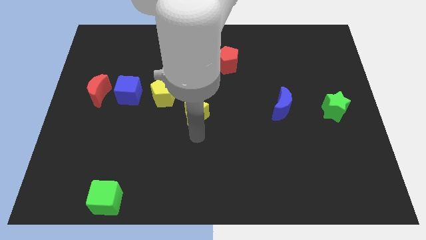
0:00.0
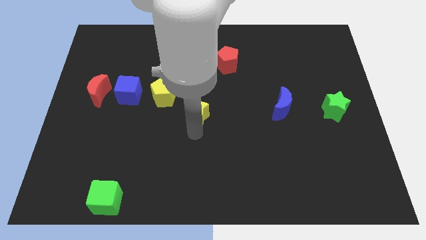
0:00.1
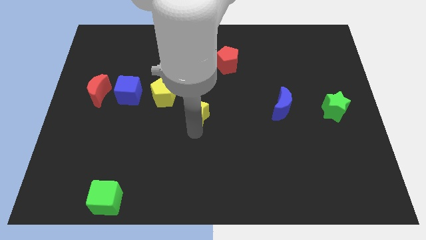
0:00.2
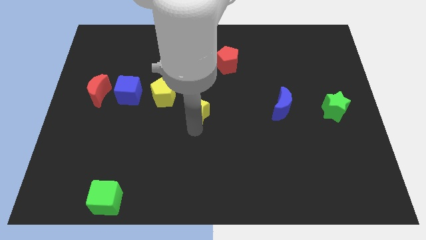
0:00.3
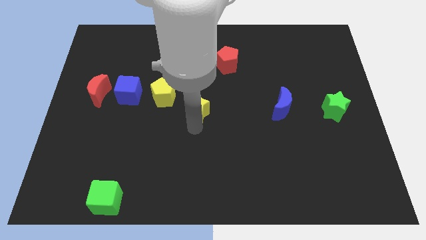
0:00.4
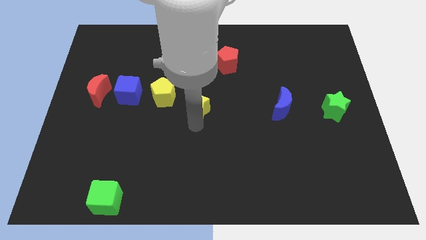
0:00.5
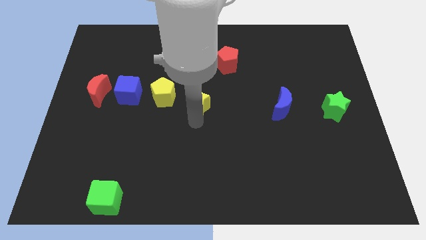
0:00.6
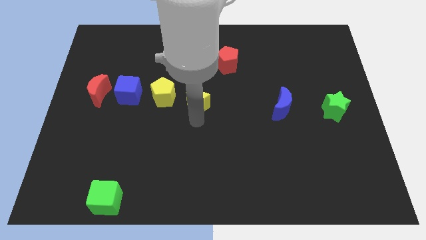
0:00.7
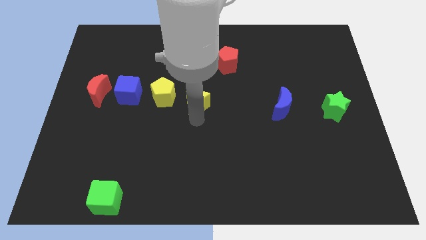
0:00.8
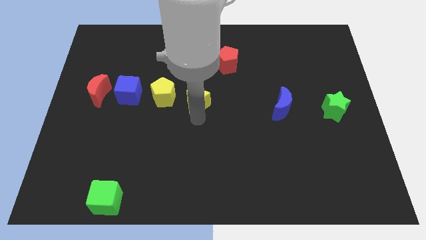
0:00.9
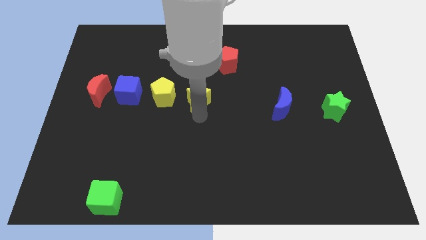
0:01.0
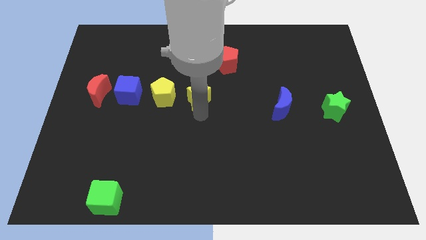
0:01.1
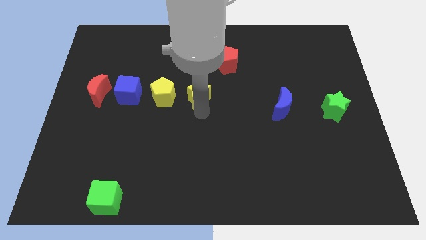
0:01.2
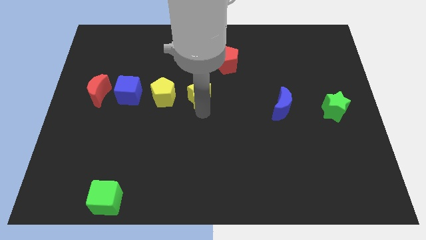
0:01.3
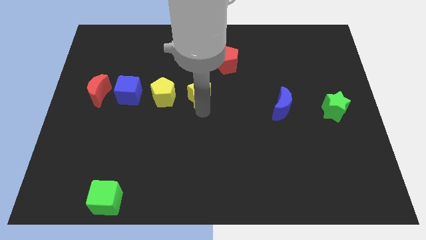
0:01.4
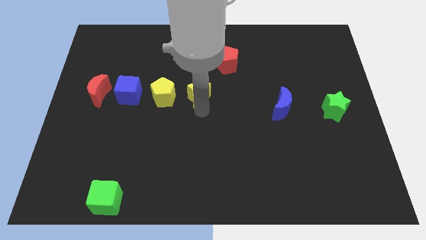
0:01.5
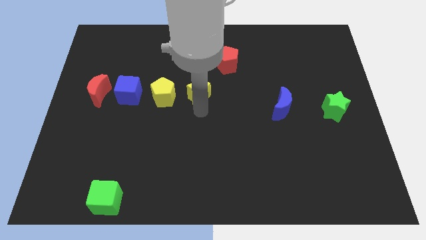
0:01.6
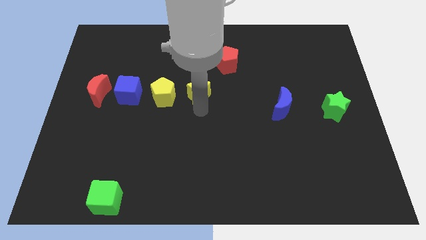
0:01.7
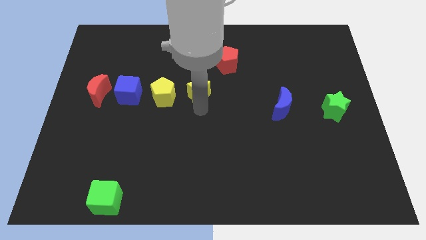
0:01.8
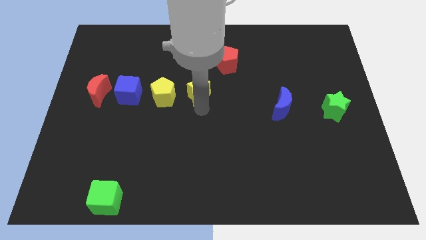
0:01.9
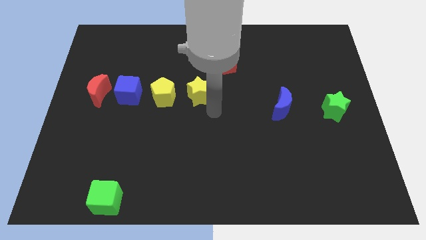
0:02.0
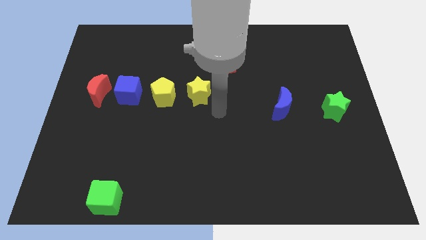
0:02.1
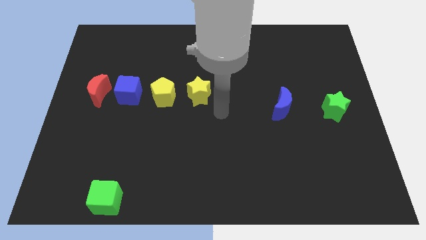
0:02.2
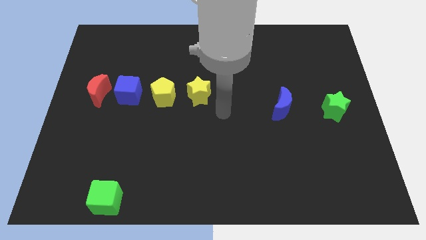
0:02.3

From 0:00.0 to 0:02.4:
place the yellow star to the right of the yellow pentagon

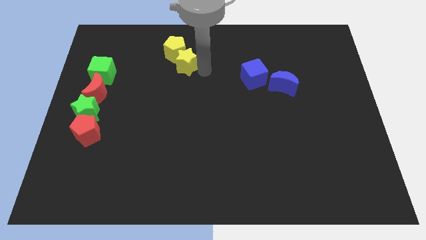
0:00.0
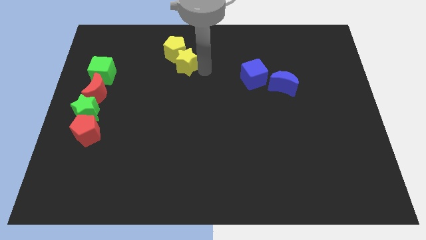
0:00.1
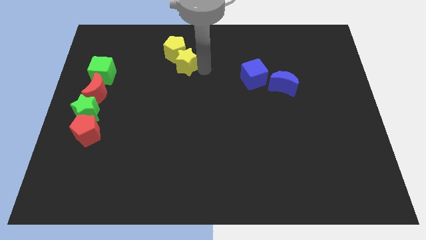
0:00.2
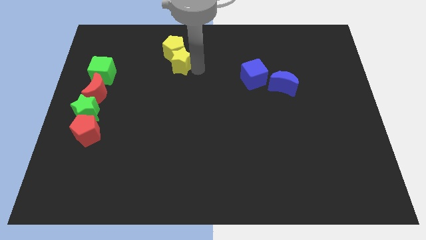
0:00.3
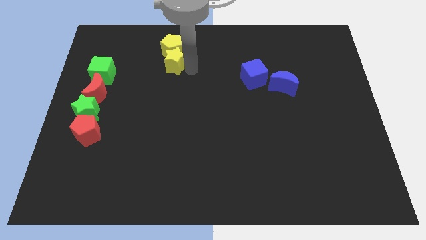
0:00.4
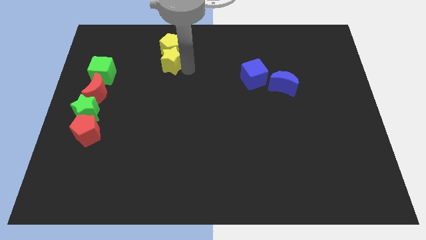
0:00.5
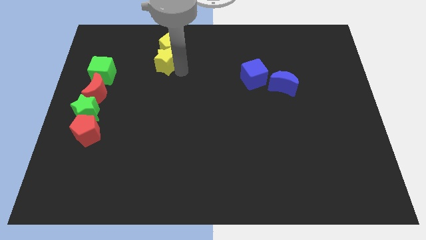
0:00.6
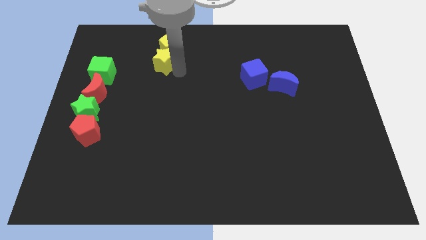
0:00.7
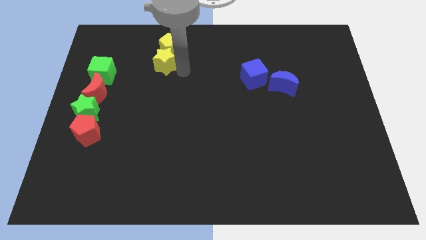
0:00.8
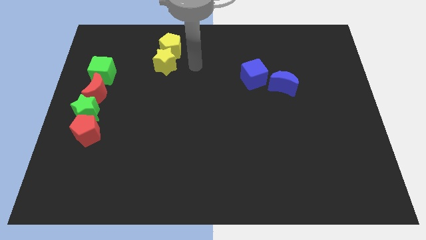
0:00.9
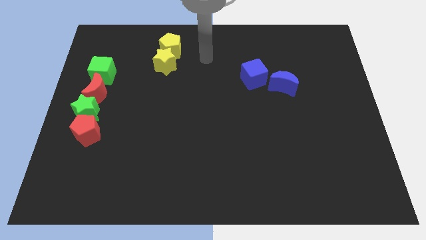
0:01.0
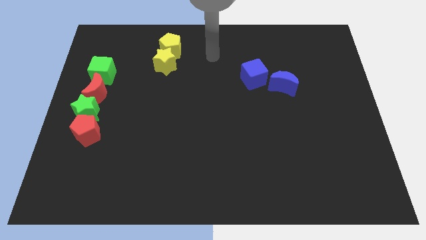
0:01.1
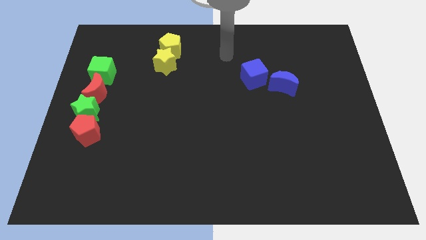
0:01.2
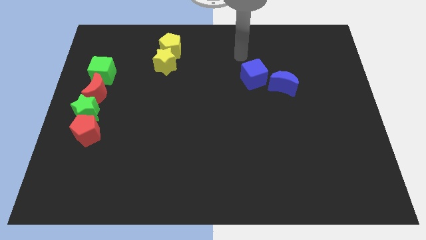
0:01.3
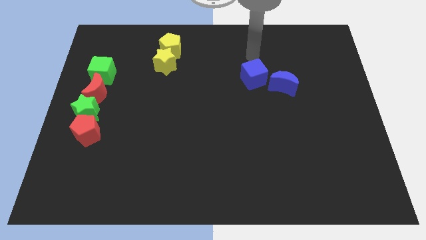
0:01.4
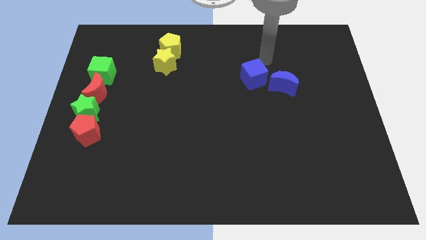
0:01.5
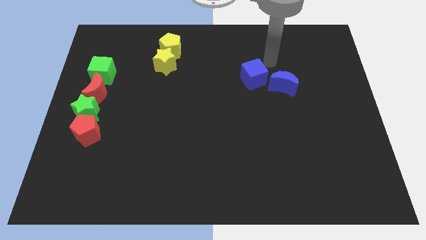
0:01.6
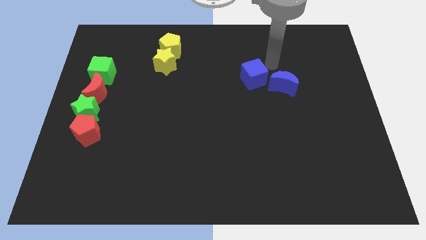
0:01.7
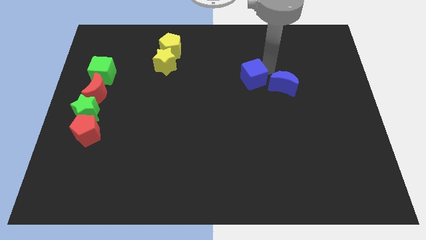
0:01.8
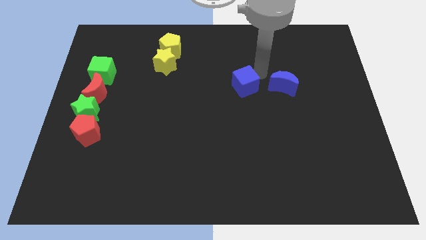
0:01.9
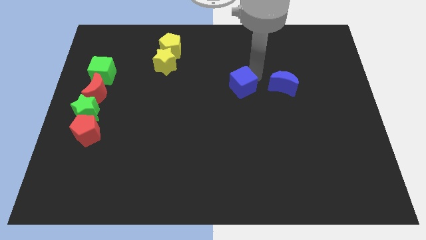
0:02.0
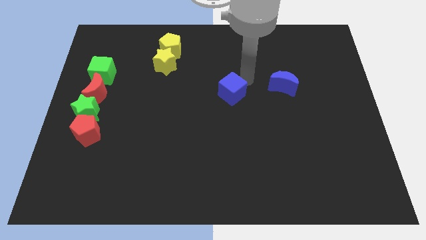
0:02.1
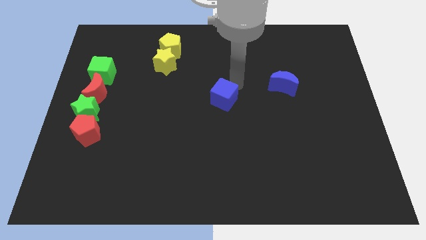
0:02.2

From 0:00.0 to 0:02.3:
separate blue cube from blue moon

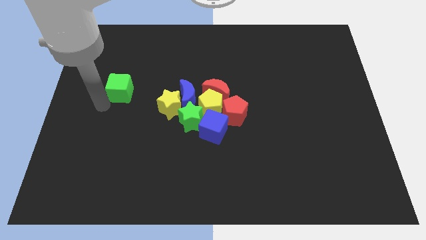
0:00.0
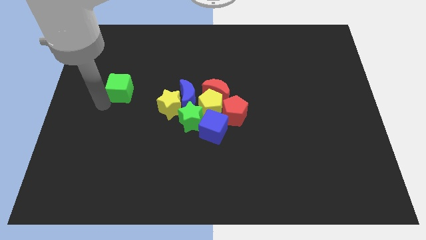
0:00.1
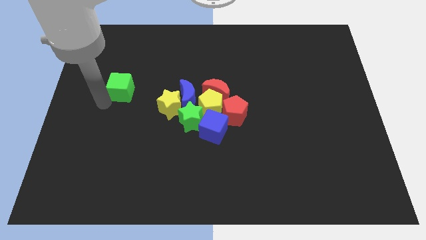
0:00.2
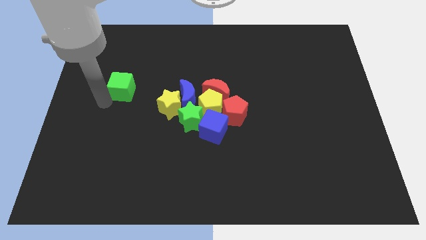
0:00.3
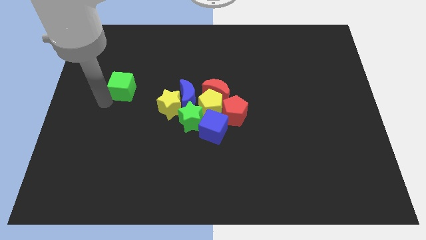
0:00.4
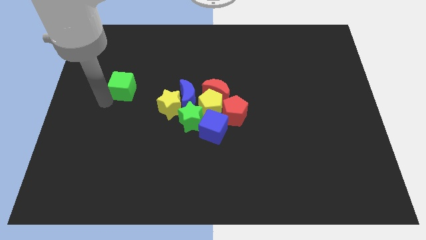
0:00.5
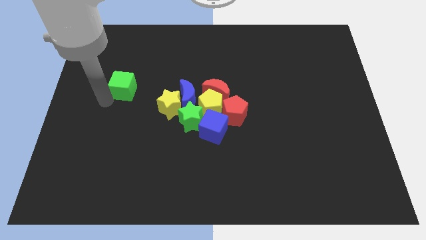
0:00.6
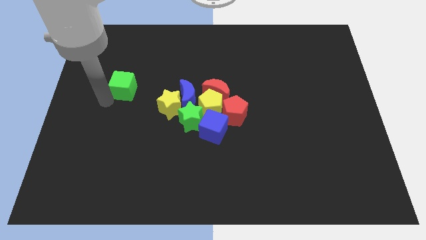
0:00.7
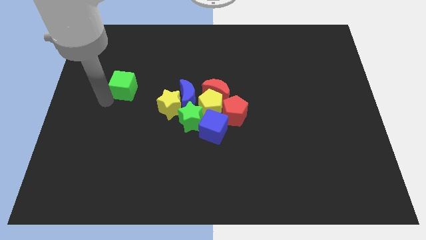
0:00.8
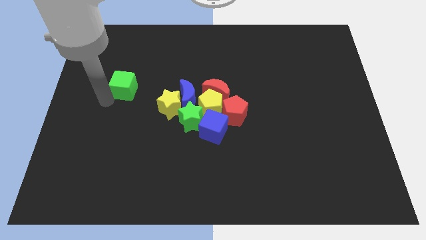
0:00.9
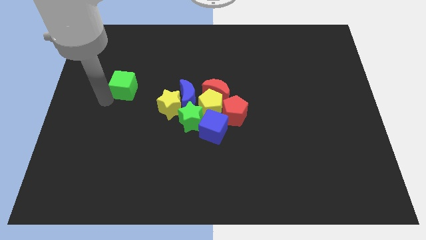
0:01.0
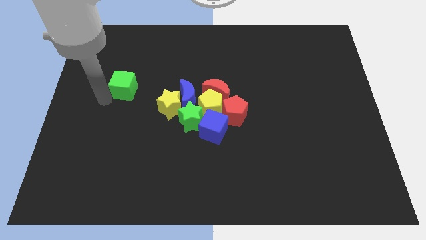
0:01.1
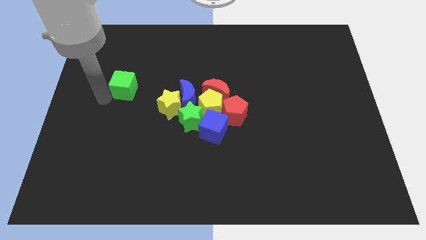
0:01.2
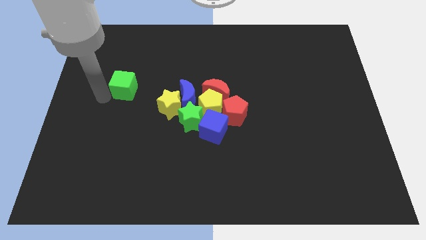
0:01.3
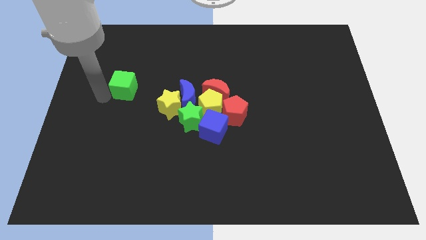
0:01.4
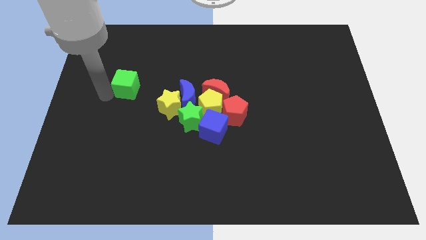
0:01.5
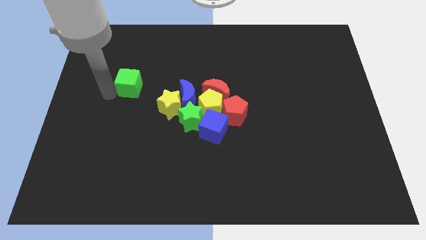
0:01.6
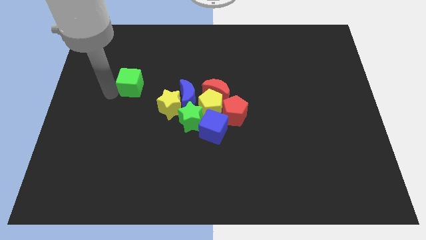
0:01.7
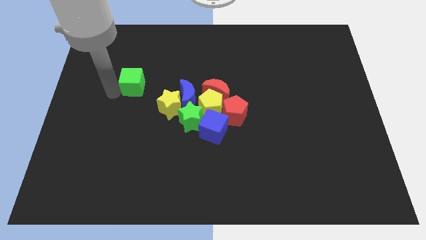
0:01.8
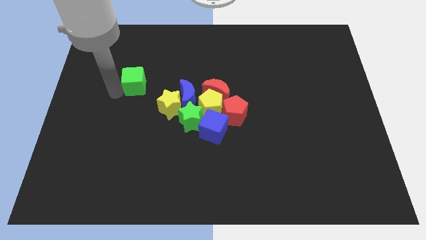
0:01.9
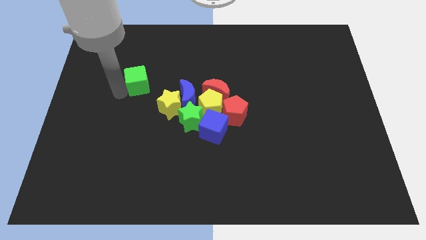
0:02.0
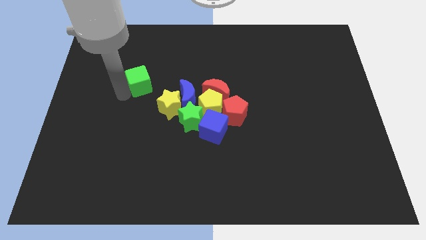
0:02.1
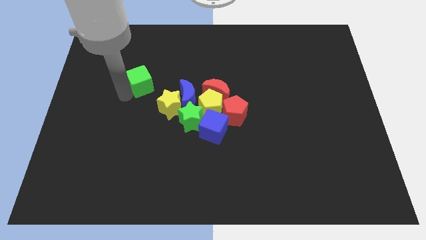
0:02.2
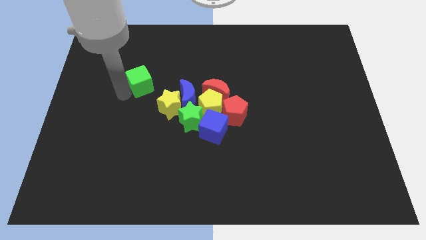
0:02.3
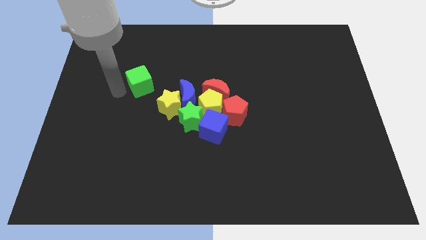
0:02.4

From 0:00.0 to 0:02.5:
push the green cube to the top left of the yellow star

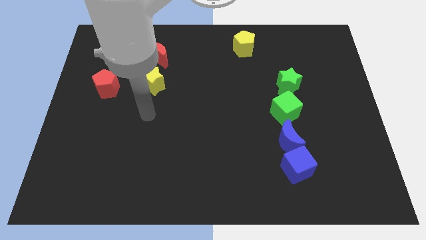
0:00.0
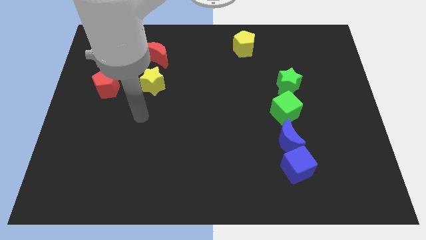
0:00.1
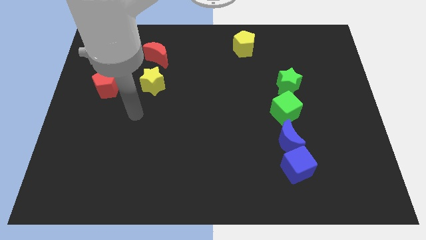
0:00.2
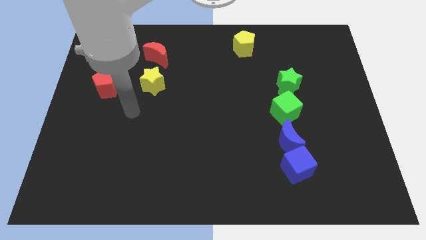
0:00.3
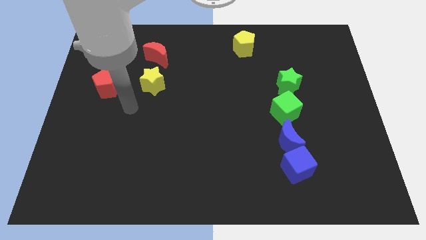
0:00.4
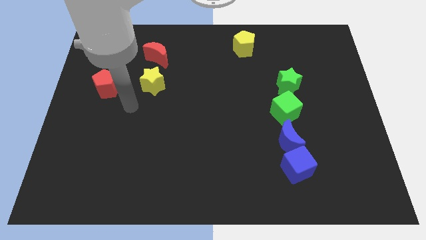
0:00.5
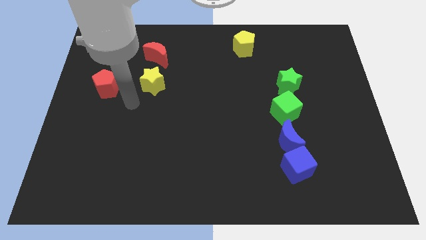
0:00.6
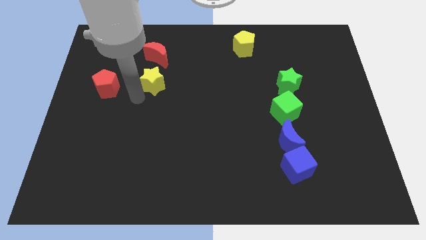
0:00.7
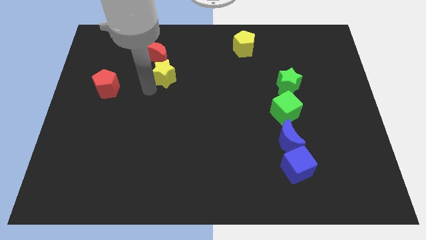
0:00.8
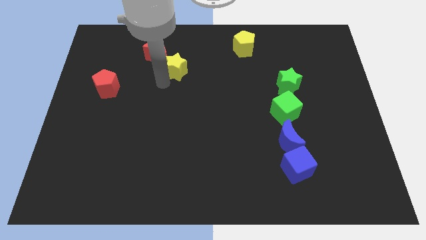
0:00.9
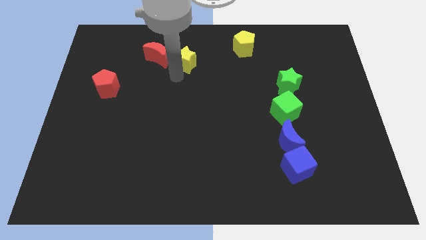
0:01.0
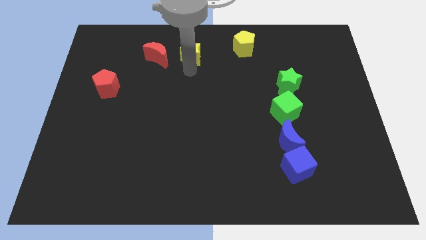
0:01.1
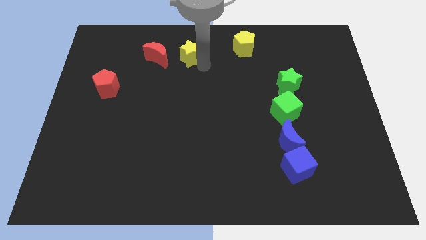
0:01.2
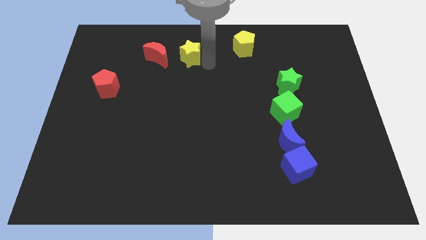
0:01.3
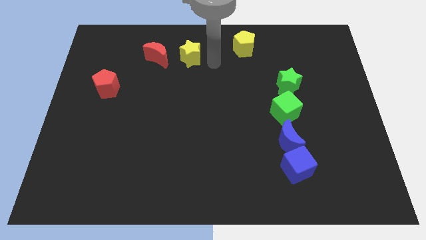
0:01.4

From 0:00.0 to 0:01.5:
place the yellow star to the right of the red crescent

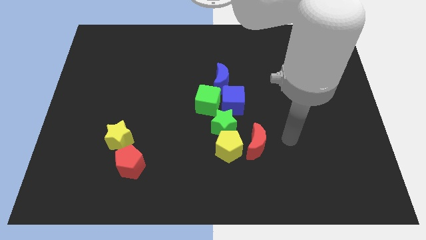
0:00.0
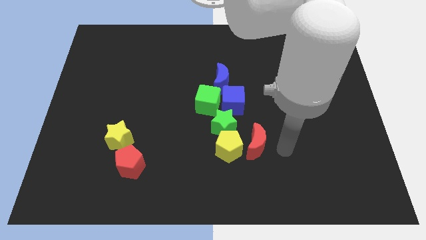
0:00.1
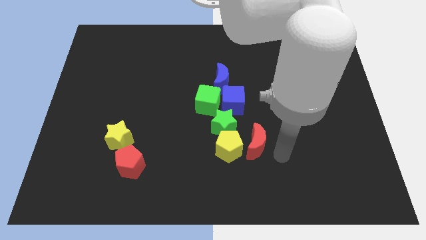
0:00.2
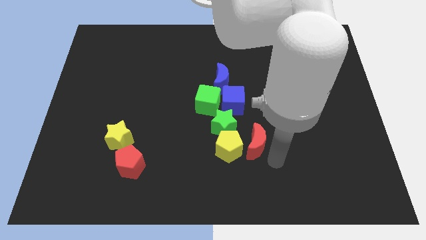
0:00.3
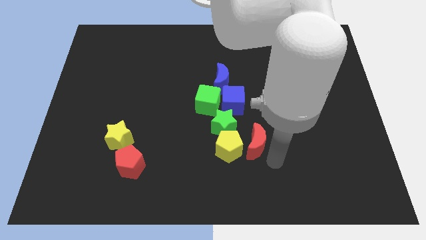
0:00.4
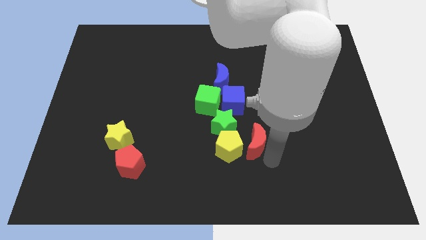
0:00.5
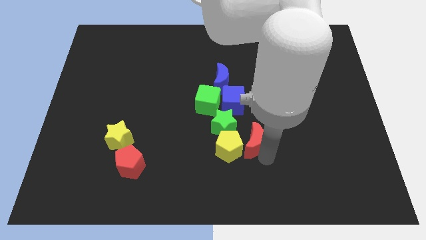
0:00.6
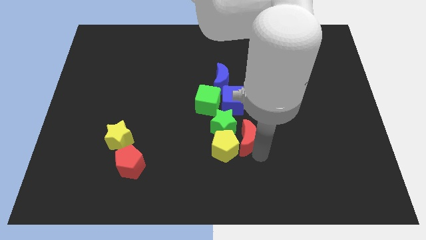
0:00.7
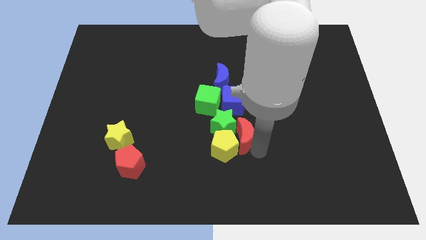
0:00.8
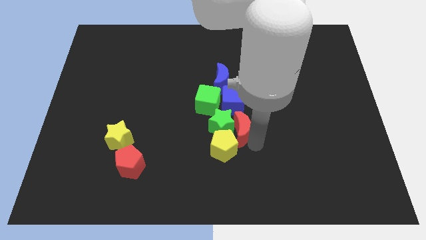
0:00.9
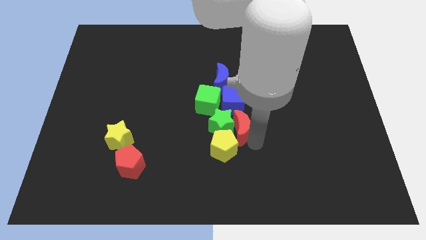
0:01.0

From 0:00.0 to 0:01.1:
move red moon to right of green star
